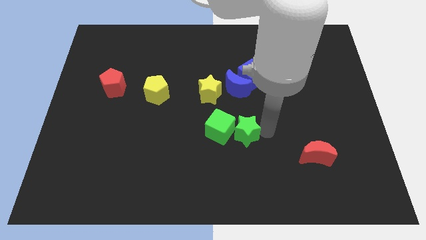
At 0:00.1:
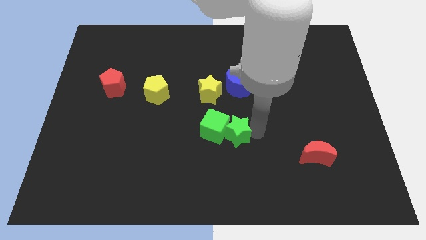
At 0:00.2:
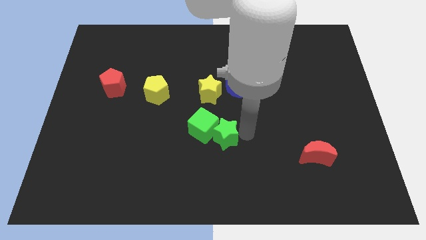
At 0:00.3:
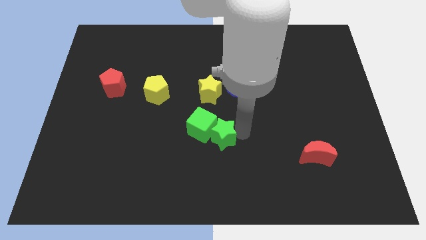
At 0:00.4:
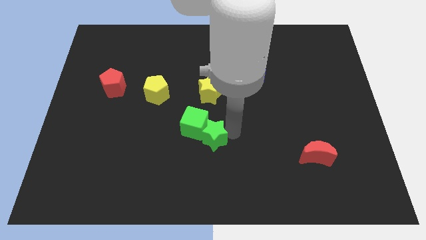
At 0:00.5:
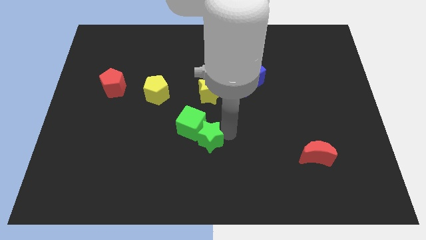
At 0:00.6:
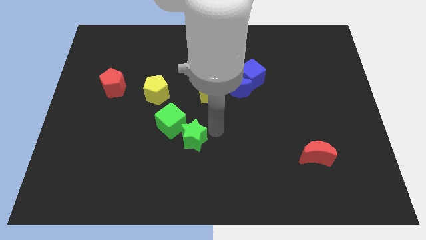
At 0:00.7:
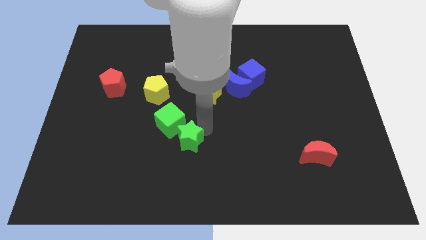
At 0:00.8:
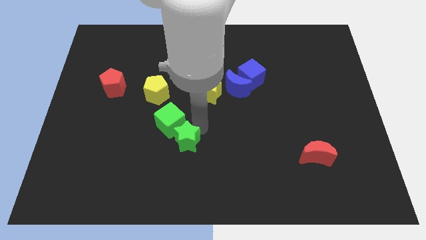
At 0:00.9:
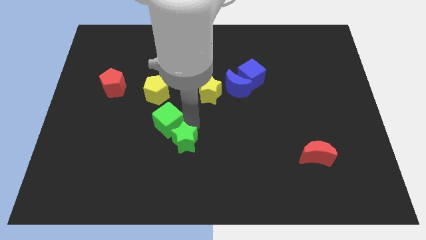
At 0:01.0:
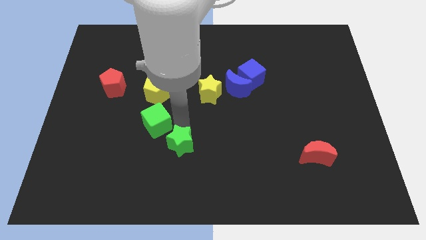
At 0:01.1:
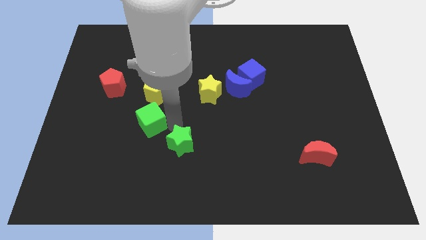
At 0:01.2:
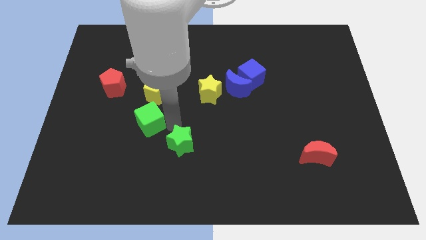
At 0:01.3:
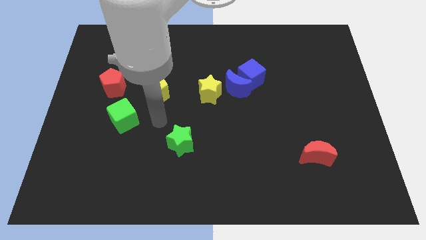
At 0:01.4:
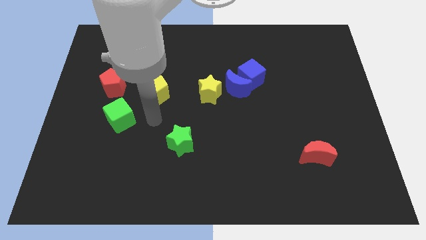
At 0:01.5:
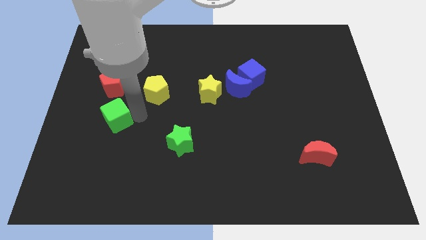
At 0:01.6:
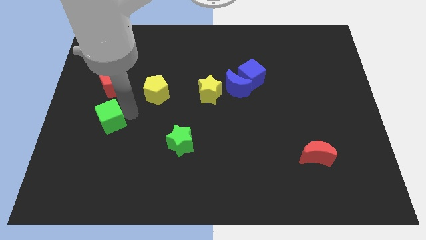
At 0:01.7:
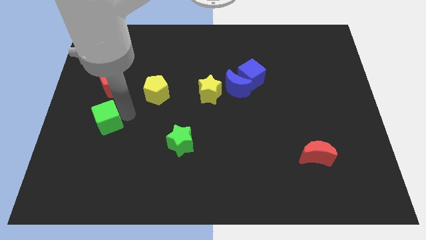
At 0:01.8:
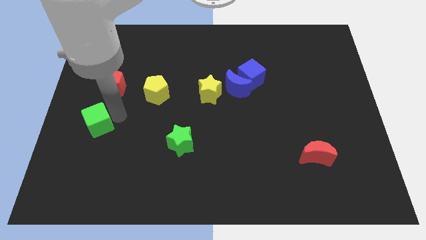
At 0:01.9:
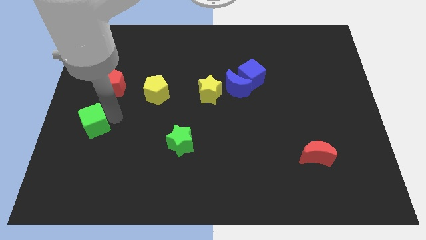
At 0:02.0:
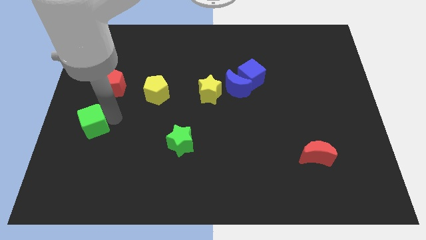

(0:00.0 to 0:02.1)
push the green star and green cube and move the cube below the red pentagon

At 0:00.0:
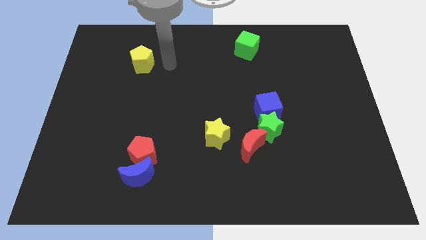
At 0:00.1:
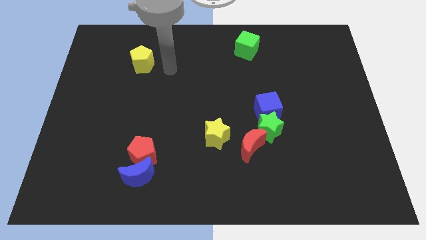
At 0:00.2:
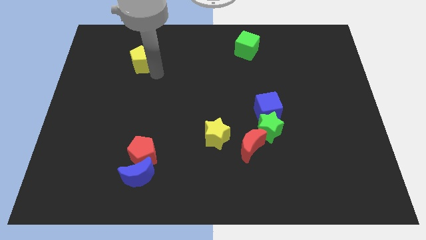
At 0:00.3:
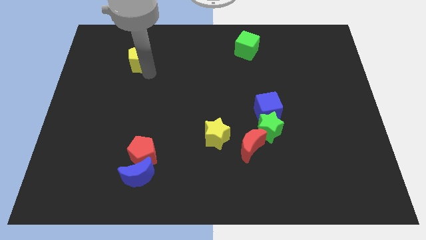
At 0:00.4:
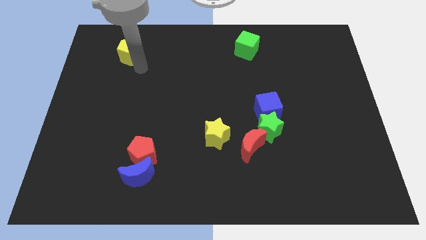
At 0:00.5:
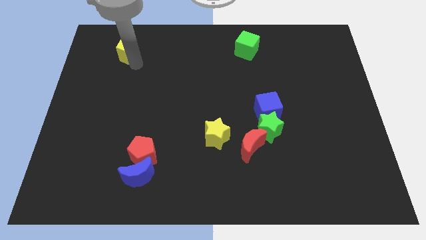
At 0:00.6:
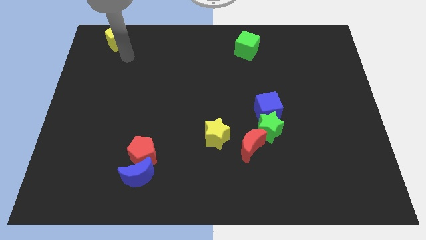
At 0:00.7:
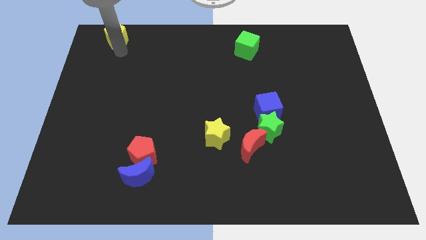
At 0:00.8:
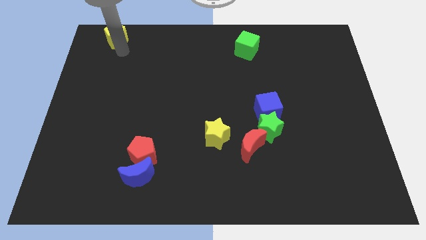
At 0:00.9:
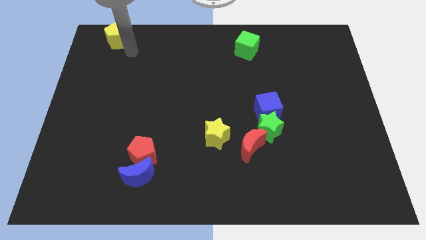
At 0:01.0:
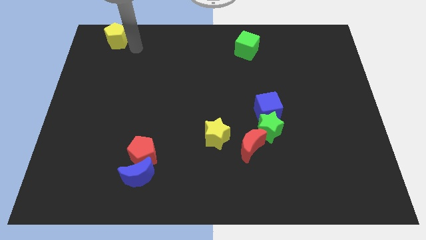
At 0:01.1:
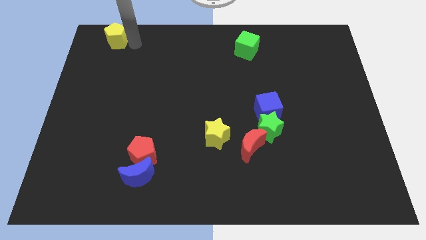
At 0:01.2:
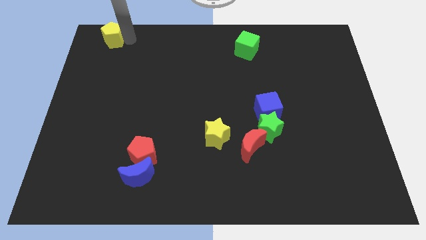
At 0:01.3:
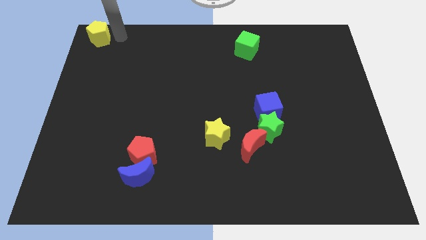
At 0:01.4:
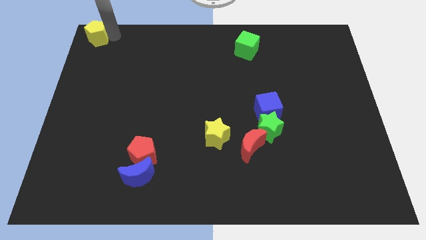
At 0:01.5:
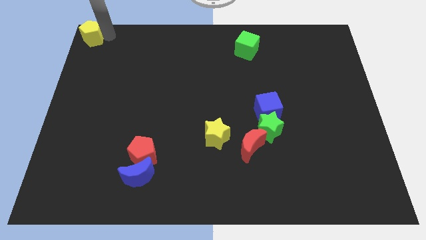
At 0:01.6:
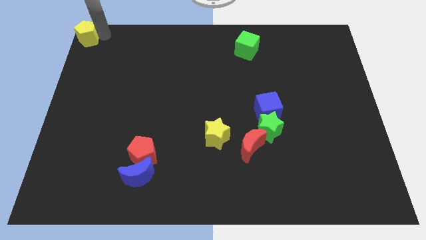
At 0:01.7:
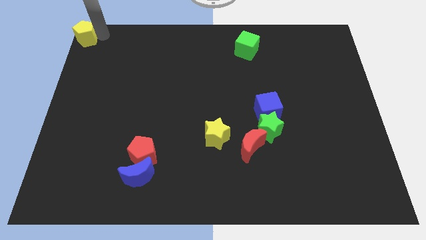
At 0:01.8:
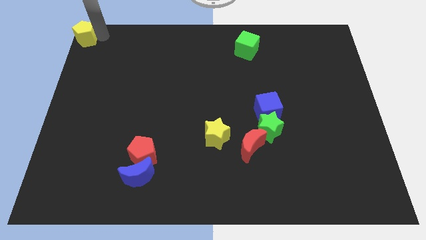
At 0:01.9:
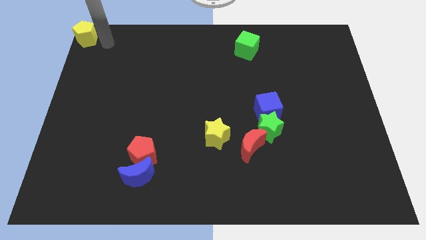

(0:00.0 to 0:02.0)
move the yellow pentagon to the top left corner

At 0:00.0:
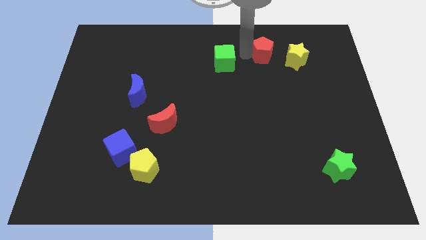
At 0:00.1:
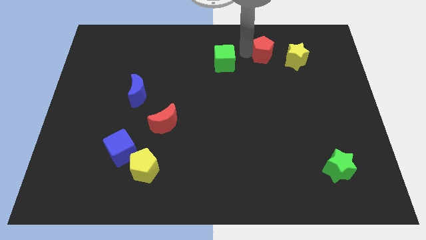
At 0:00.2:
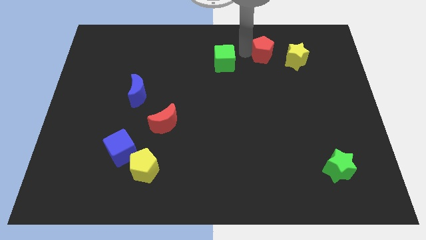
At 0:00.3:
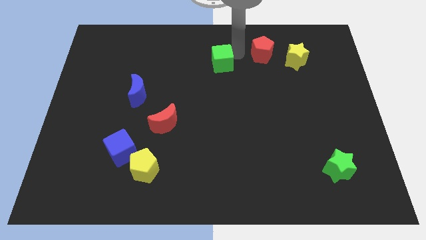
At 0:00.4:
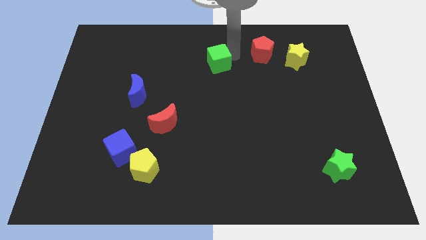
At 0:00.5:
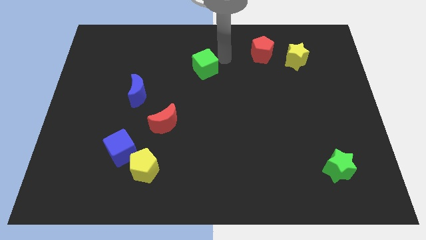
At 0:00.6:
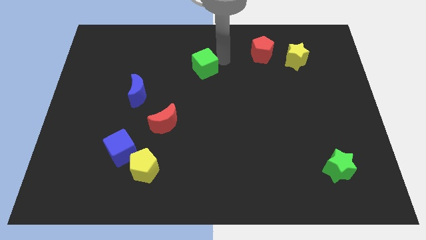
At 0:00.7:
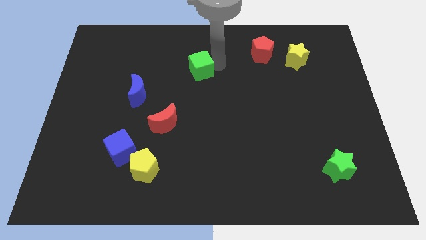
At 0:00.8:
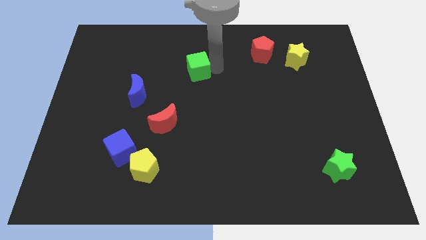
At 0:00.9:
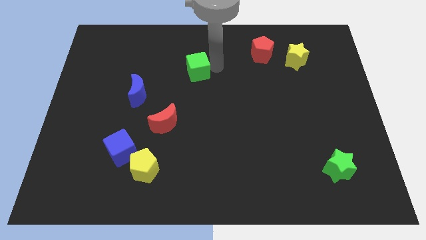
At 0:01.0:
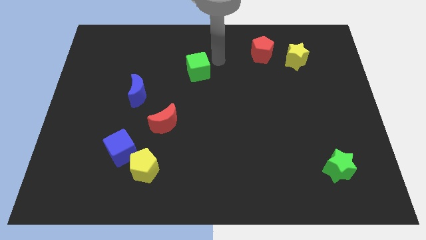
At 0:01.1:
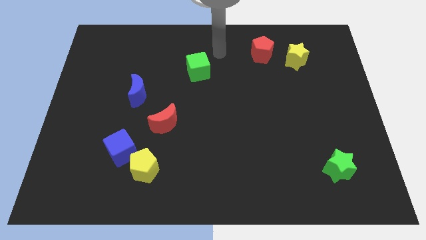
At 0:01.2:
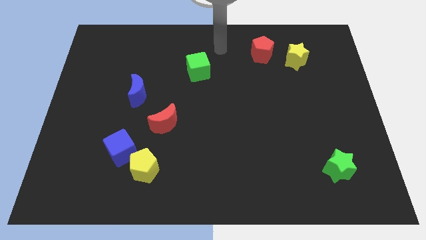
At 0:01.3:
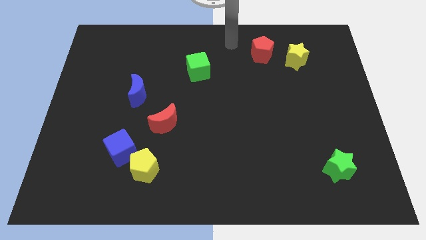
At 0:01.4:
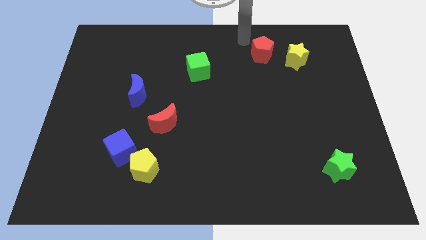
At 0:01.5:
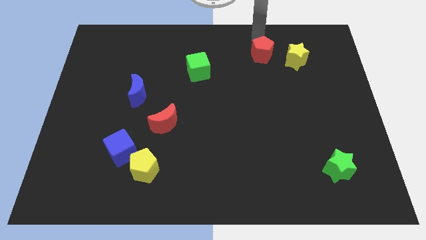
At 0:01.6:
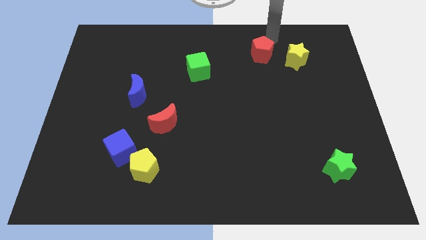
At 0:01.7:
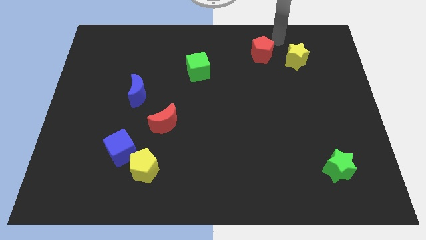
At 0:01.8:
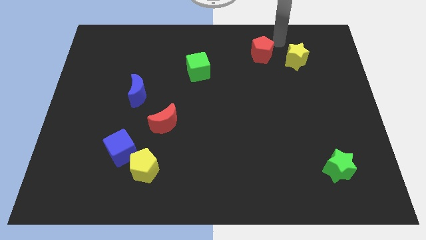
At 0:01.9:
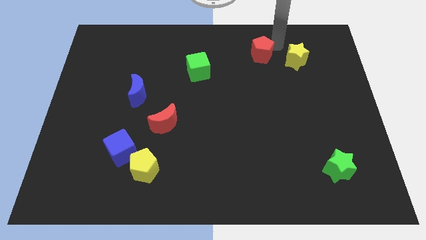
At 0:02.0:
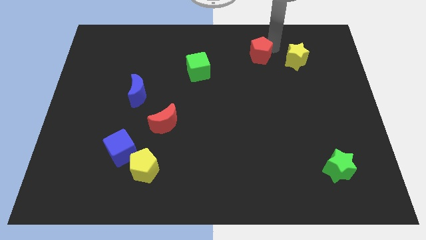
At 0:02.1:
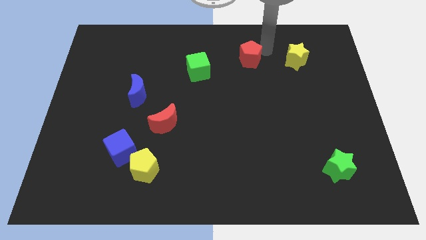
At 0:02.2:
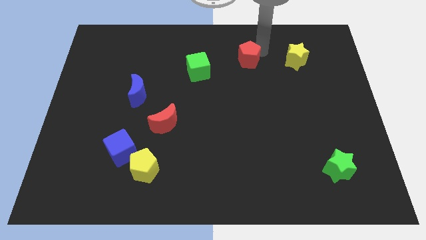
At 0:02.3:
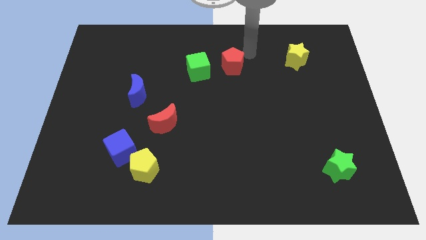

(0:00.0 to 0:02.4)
push the red pentagon slightly towards the right side of the green cube

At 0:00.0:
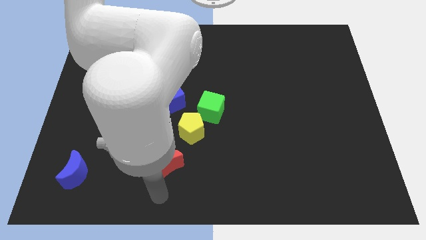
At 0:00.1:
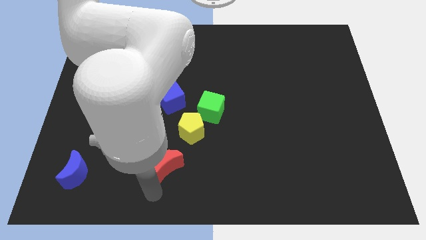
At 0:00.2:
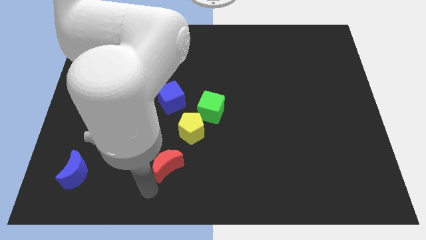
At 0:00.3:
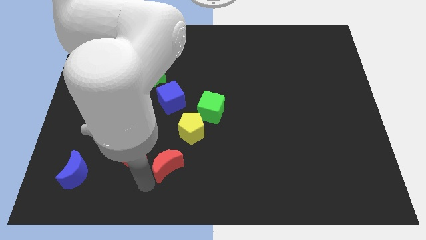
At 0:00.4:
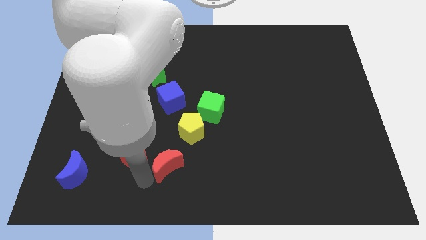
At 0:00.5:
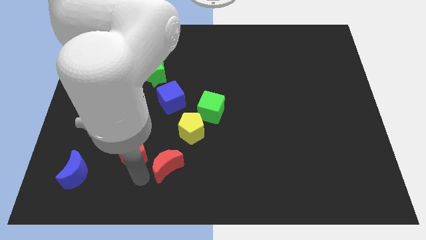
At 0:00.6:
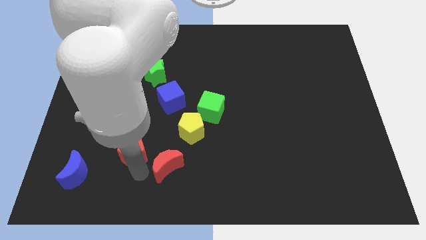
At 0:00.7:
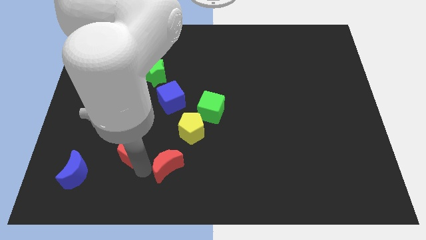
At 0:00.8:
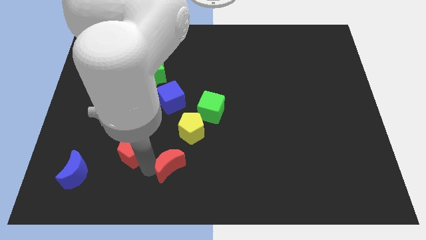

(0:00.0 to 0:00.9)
place your arm in between red blocks

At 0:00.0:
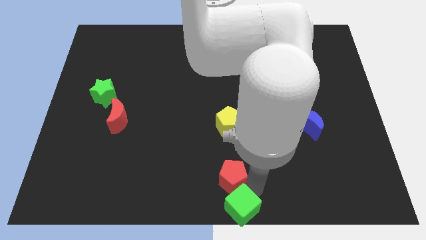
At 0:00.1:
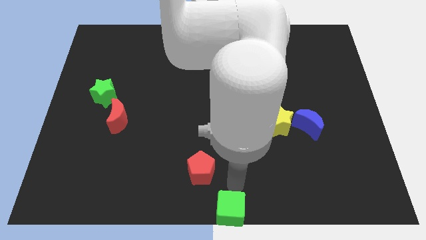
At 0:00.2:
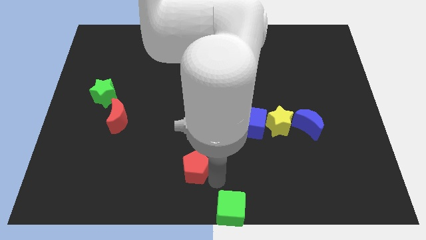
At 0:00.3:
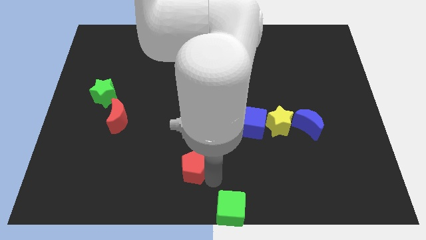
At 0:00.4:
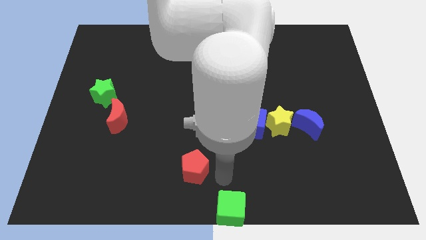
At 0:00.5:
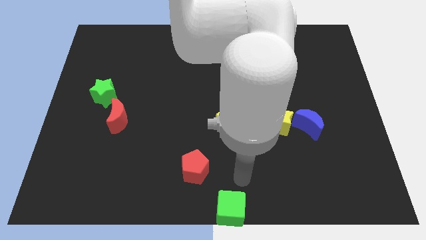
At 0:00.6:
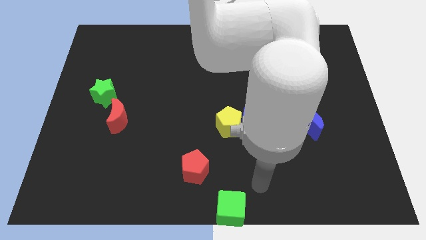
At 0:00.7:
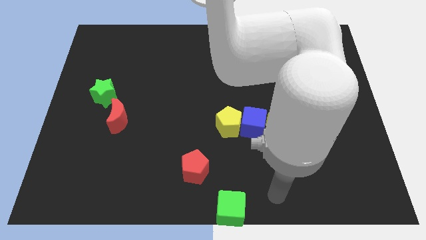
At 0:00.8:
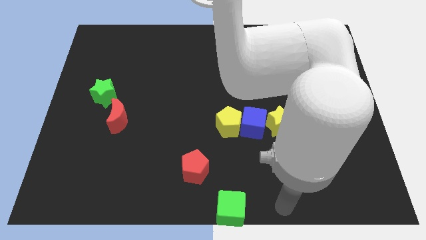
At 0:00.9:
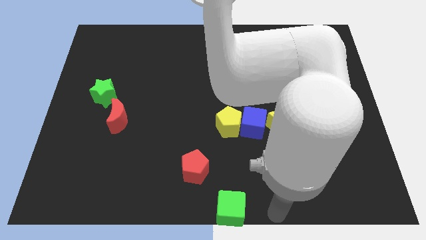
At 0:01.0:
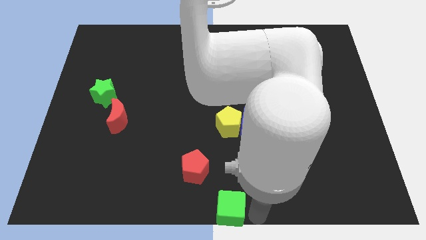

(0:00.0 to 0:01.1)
move the red pentagon to the left

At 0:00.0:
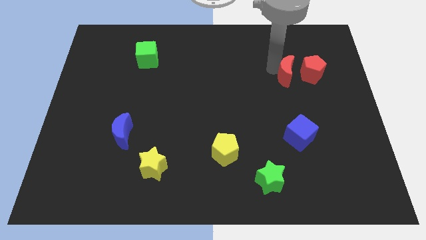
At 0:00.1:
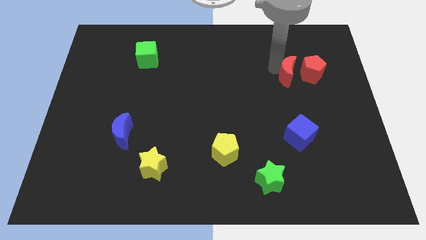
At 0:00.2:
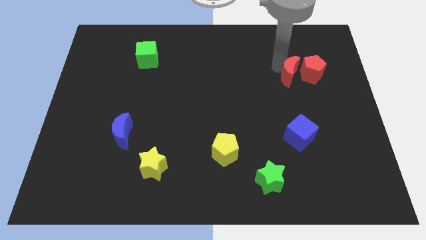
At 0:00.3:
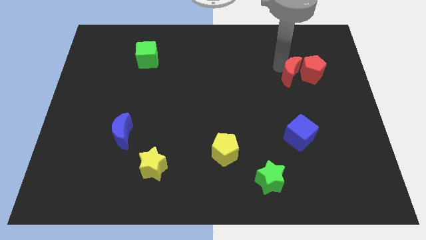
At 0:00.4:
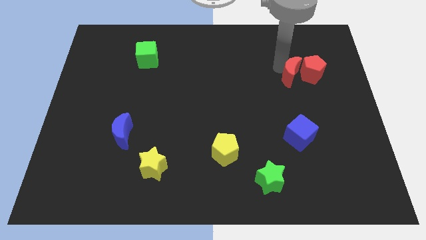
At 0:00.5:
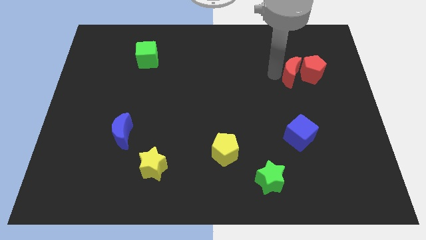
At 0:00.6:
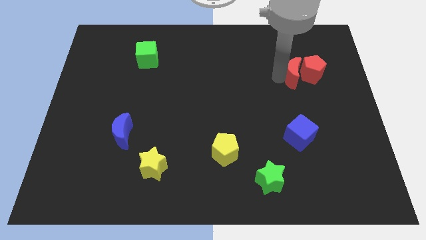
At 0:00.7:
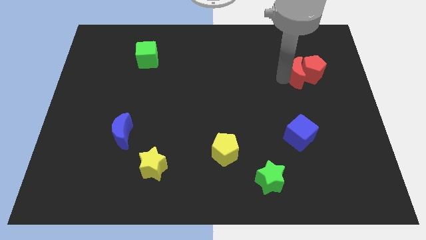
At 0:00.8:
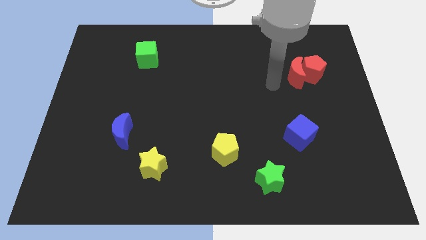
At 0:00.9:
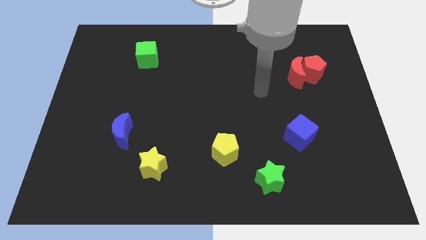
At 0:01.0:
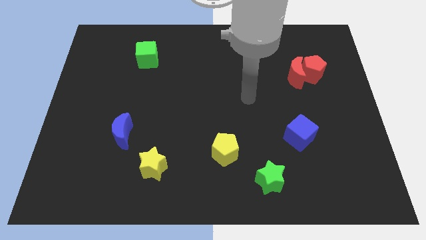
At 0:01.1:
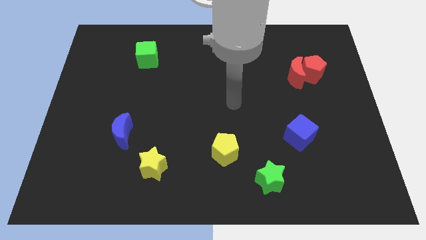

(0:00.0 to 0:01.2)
push the red crescent into the red pentagon
